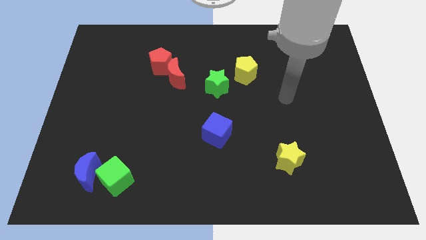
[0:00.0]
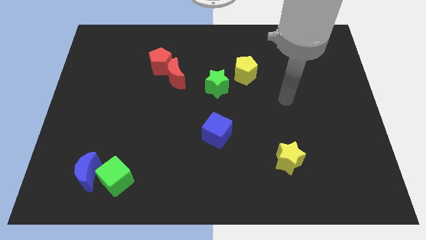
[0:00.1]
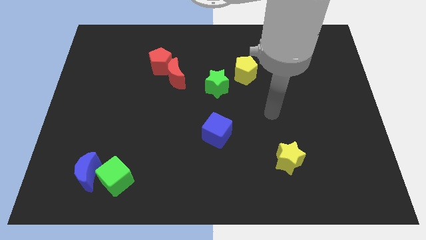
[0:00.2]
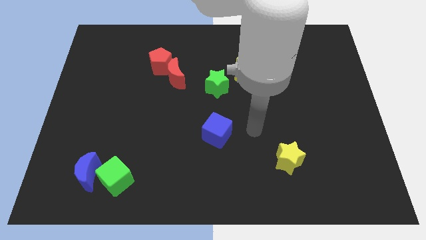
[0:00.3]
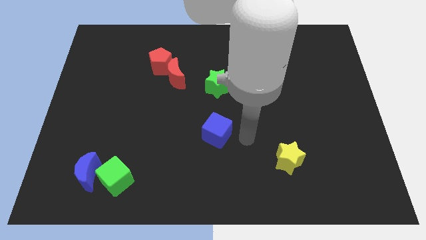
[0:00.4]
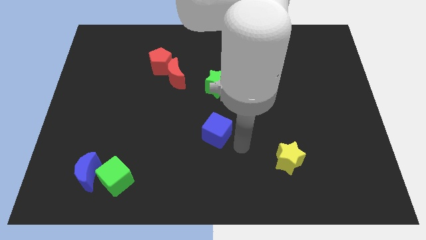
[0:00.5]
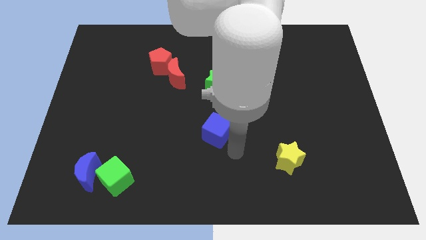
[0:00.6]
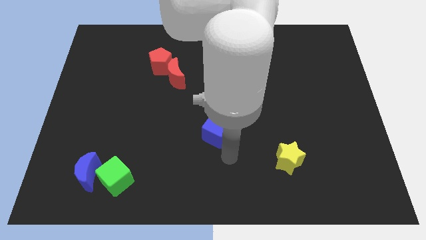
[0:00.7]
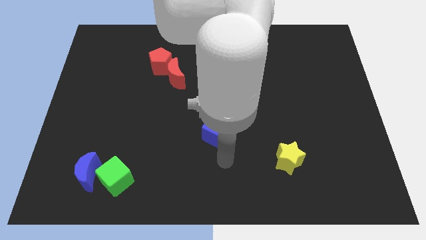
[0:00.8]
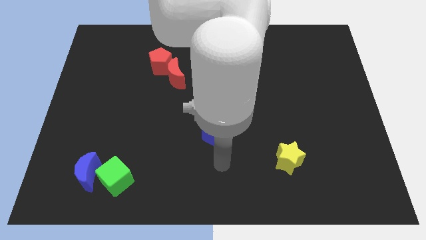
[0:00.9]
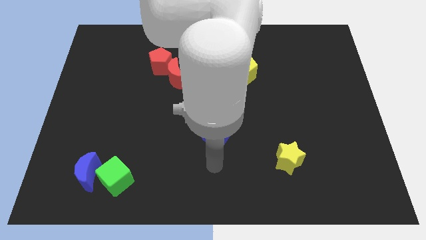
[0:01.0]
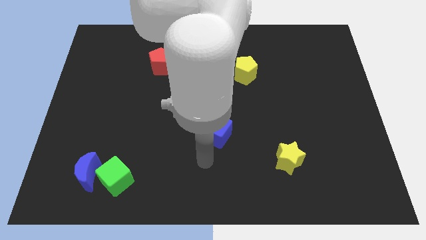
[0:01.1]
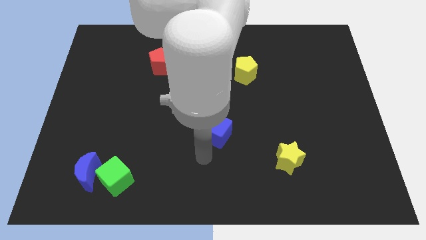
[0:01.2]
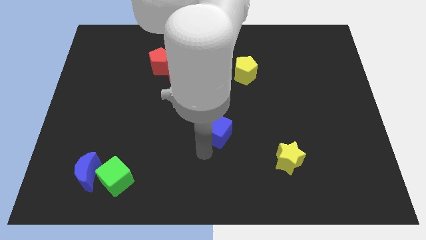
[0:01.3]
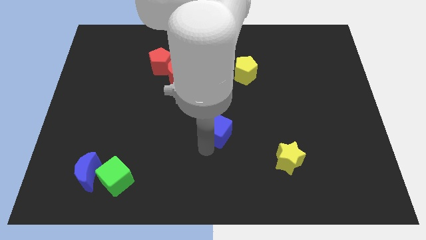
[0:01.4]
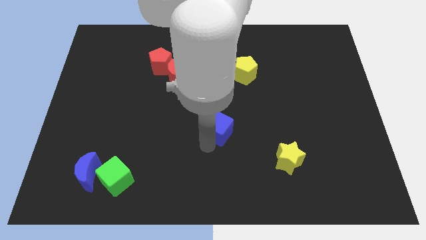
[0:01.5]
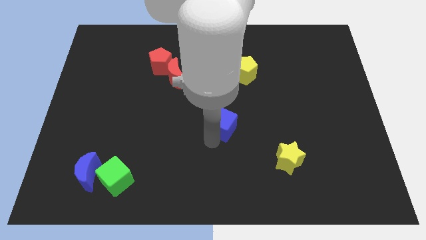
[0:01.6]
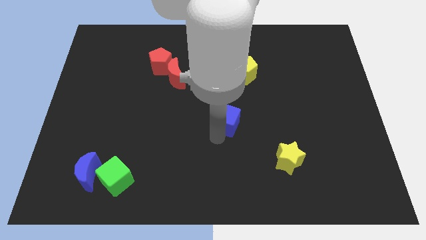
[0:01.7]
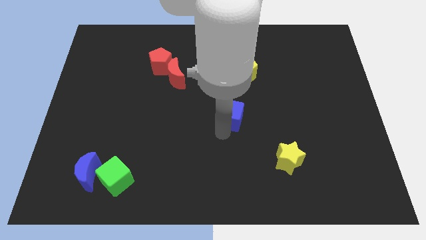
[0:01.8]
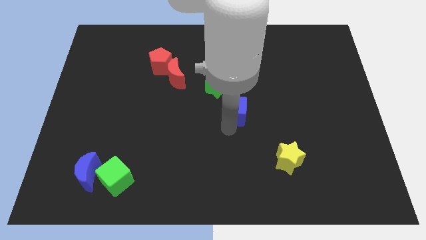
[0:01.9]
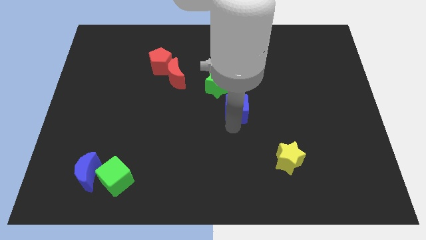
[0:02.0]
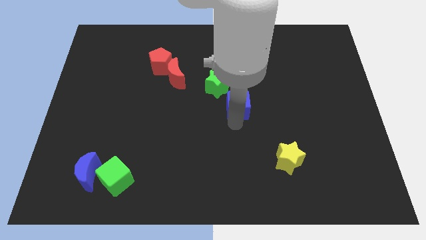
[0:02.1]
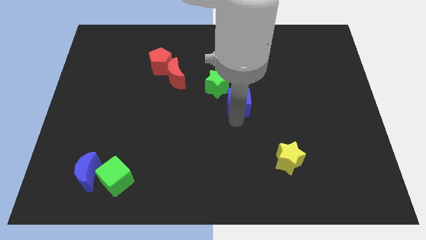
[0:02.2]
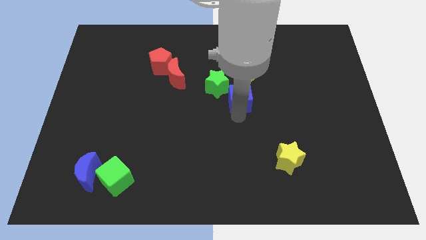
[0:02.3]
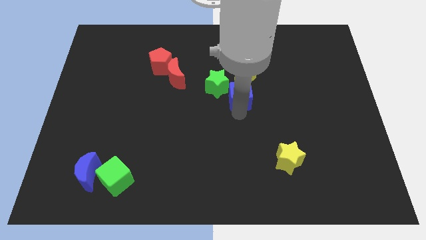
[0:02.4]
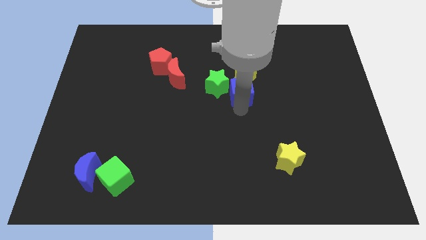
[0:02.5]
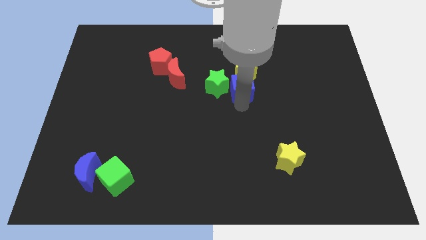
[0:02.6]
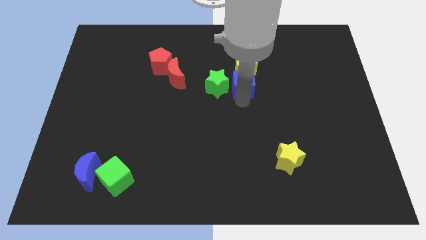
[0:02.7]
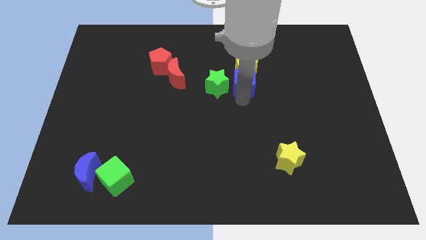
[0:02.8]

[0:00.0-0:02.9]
move the blue cube to the yellow pentagon

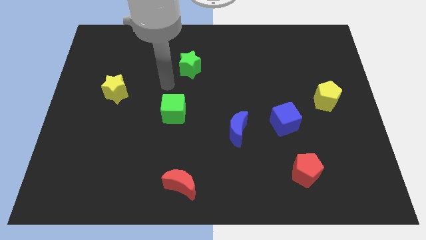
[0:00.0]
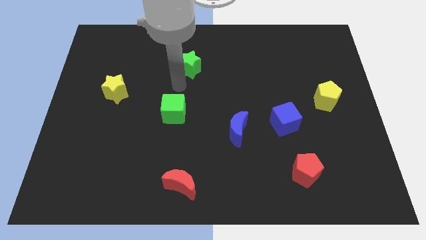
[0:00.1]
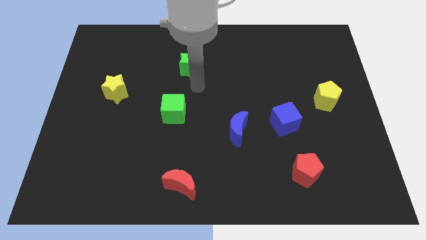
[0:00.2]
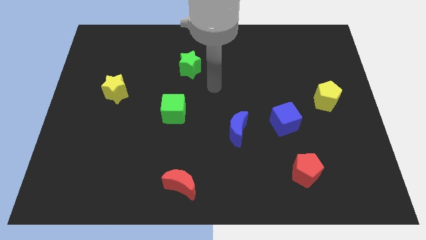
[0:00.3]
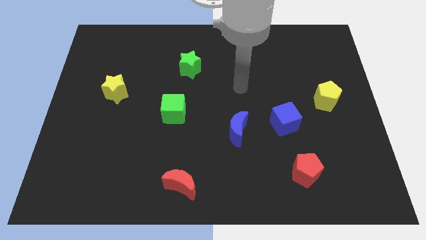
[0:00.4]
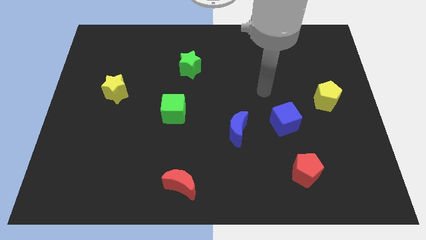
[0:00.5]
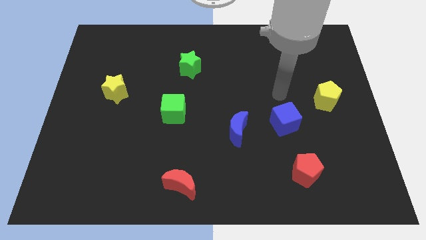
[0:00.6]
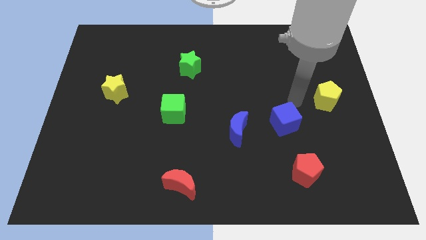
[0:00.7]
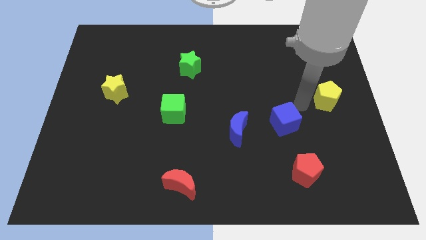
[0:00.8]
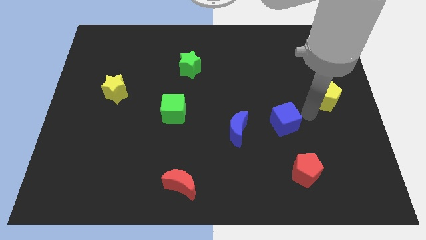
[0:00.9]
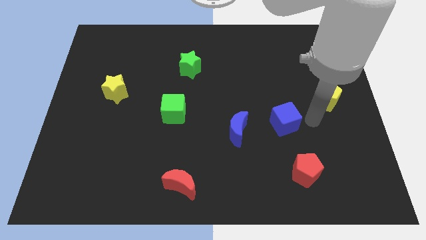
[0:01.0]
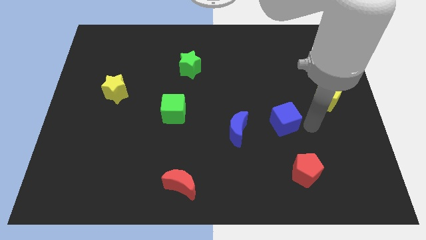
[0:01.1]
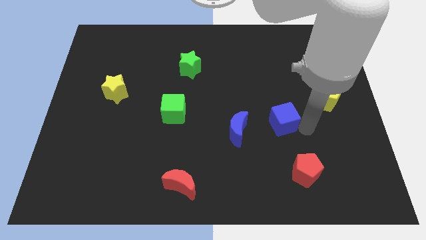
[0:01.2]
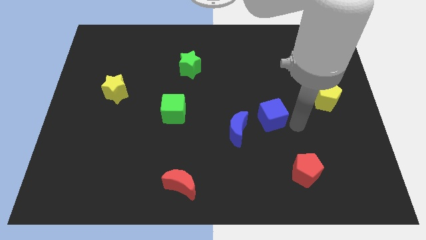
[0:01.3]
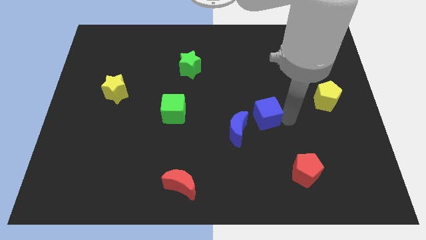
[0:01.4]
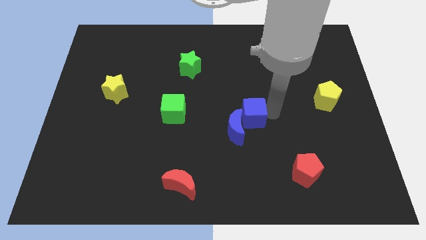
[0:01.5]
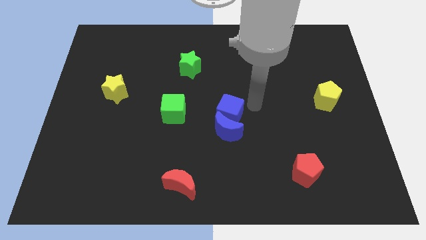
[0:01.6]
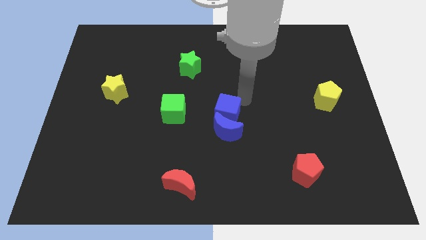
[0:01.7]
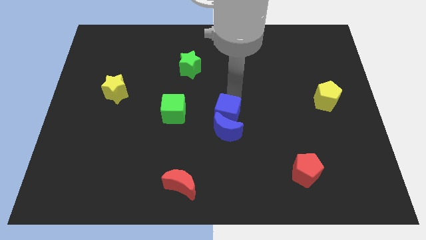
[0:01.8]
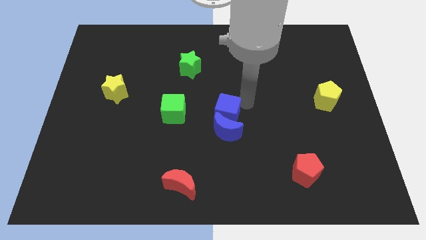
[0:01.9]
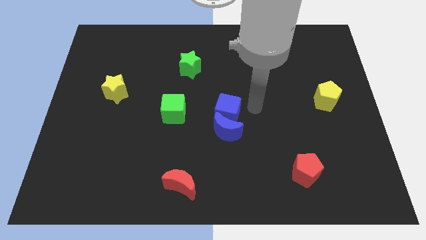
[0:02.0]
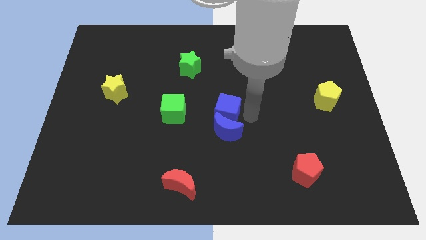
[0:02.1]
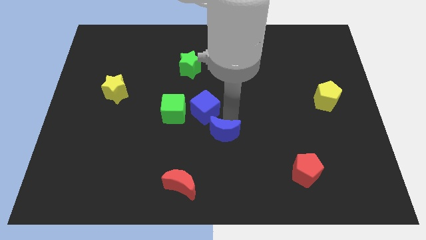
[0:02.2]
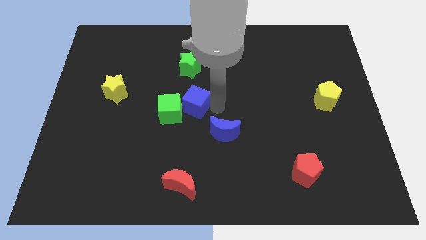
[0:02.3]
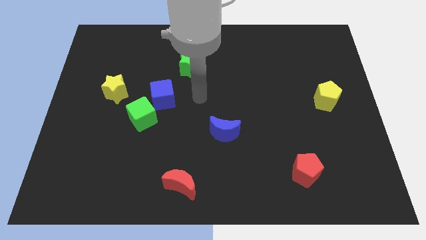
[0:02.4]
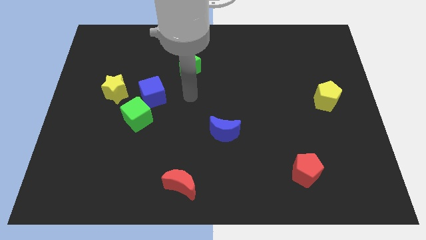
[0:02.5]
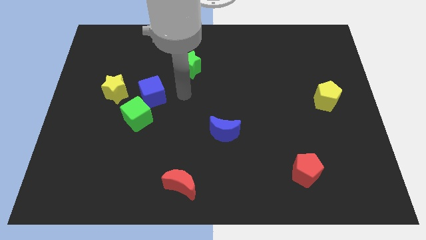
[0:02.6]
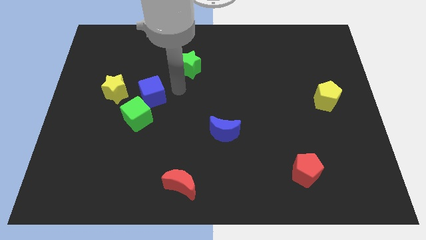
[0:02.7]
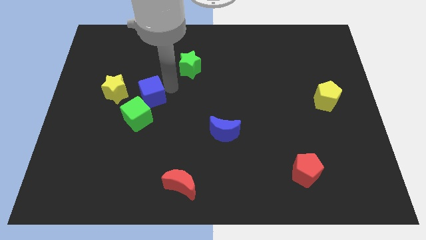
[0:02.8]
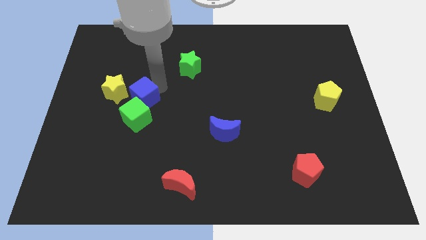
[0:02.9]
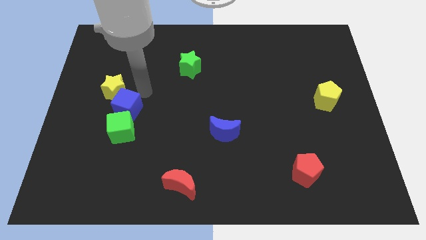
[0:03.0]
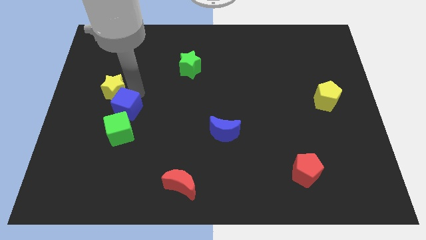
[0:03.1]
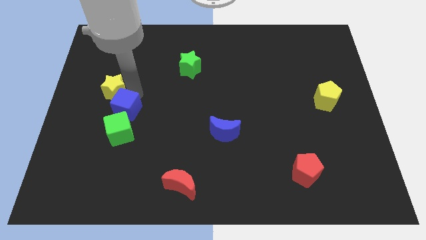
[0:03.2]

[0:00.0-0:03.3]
move the blue cube to the yellow star

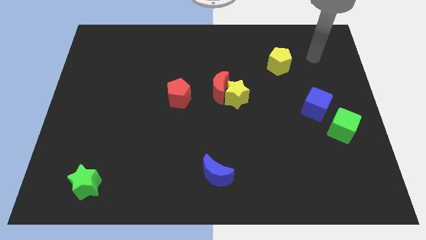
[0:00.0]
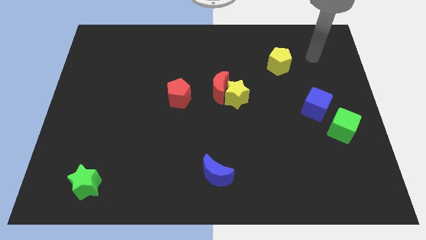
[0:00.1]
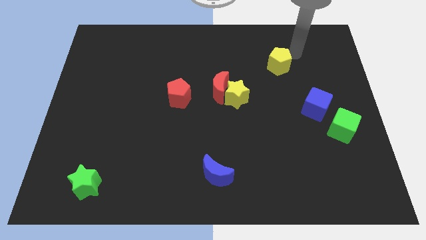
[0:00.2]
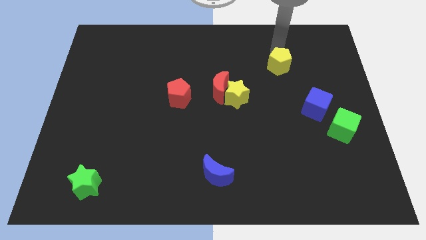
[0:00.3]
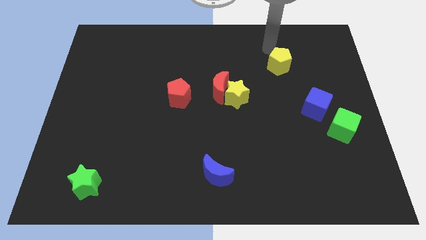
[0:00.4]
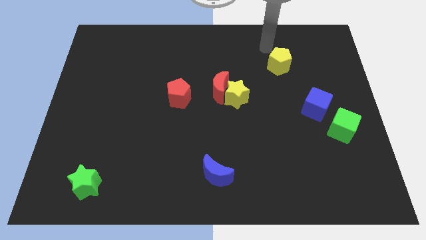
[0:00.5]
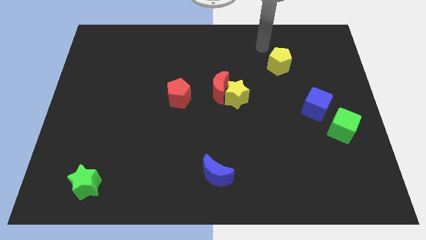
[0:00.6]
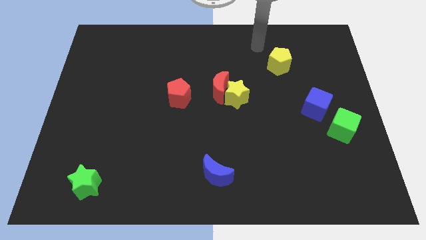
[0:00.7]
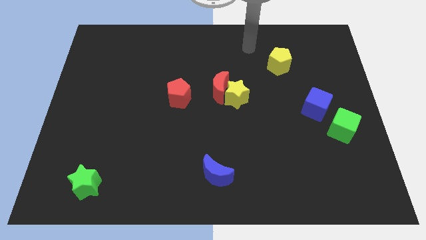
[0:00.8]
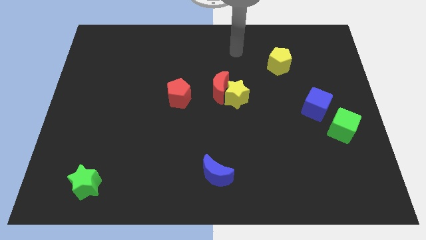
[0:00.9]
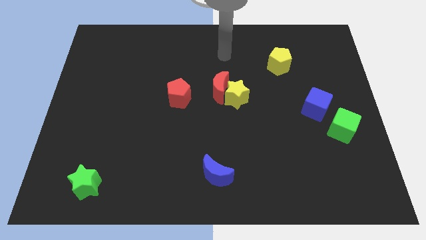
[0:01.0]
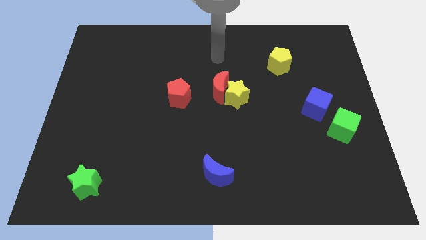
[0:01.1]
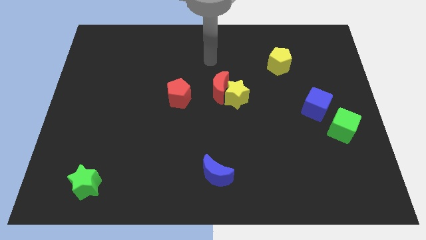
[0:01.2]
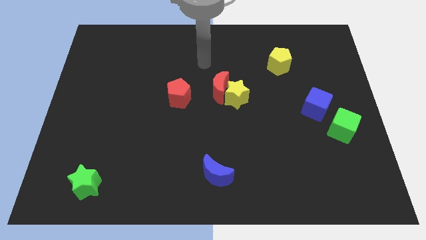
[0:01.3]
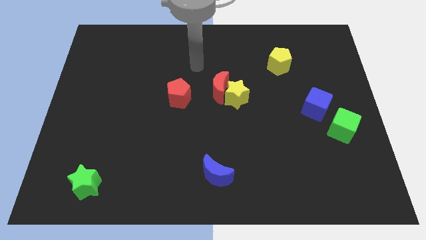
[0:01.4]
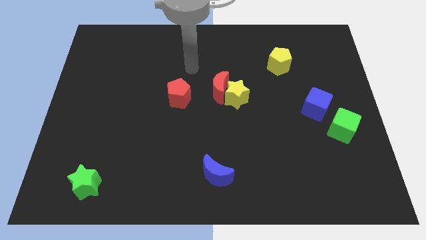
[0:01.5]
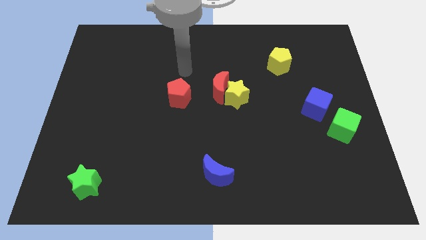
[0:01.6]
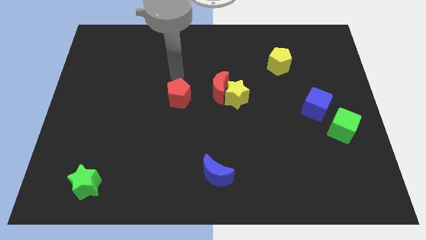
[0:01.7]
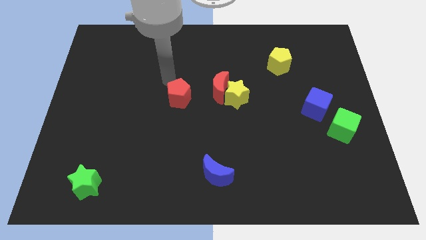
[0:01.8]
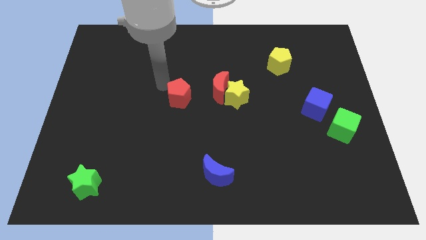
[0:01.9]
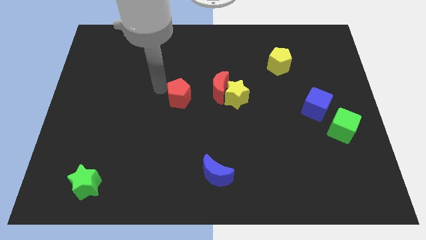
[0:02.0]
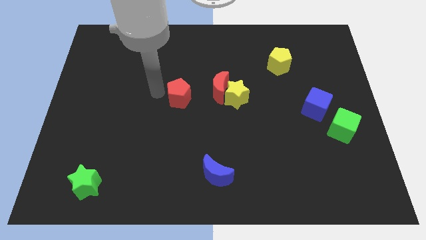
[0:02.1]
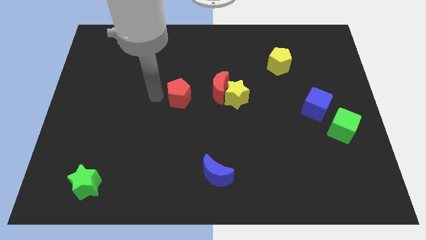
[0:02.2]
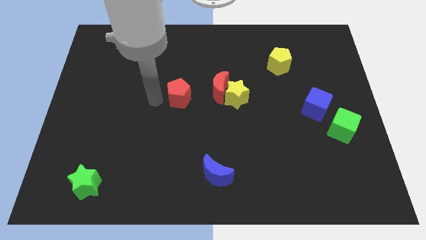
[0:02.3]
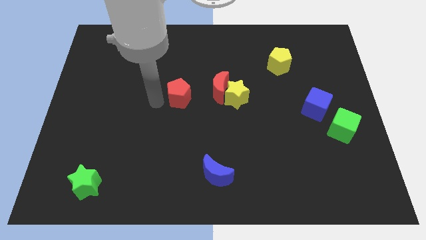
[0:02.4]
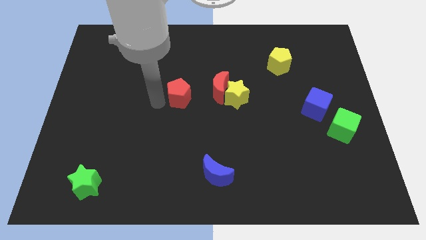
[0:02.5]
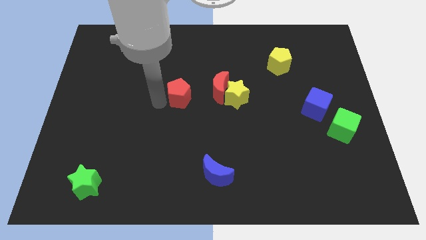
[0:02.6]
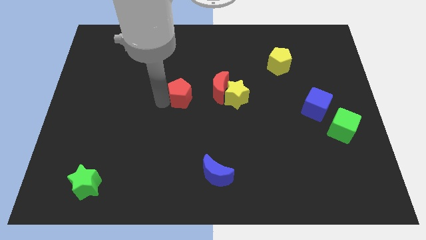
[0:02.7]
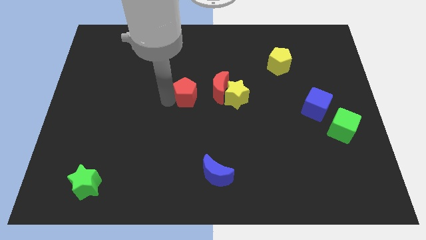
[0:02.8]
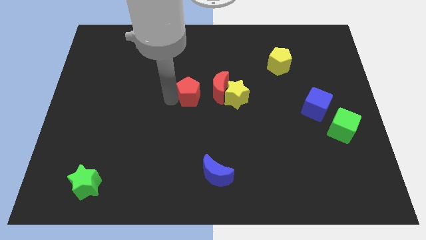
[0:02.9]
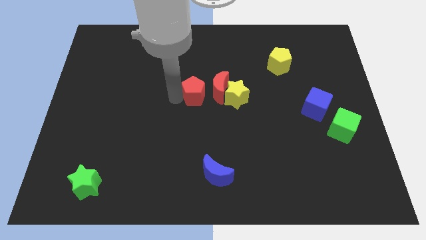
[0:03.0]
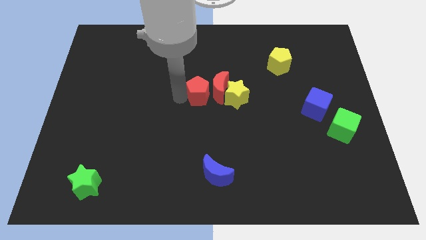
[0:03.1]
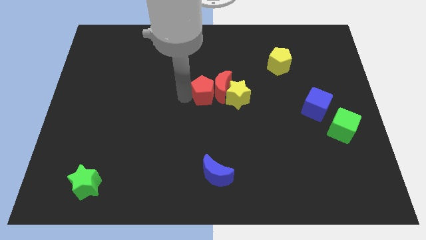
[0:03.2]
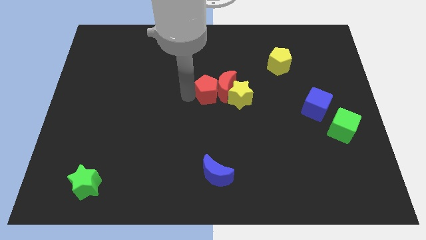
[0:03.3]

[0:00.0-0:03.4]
move the red pentagon towards the red moon
